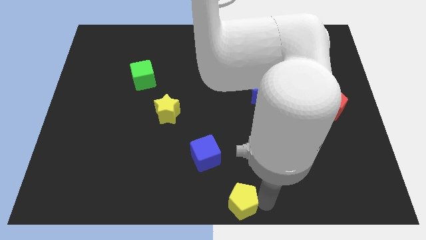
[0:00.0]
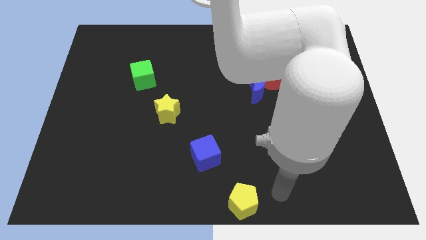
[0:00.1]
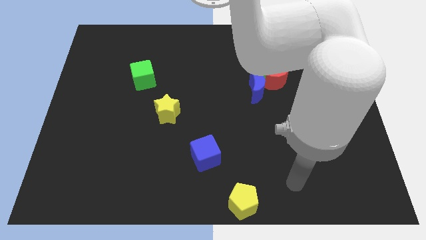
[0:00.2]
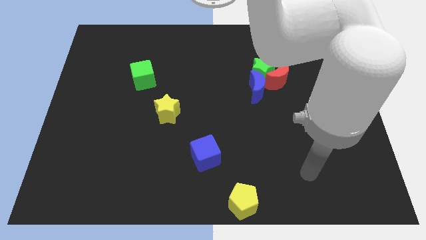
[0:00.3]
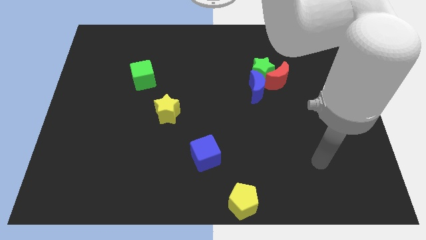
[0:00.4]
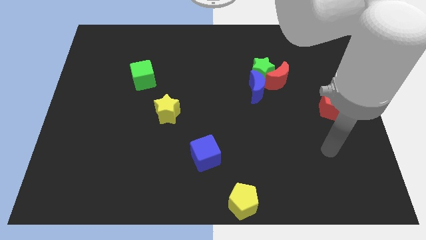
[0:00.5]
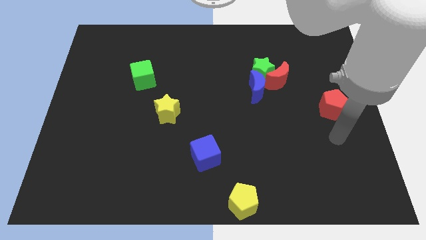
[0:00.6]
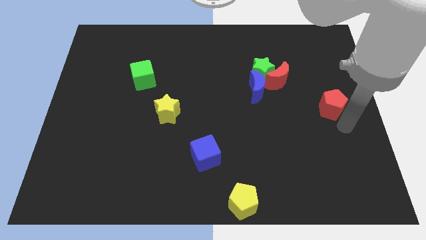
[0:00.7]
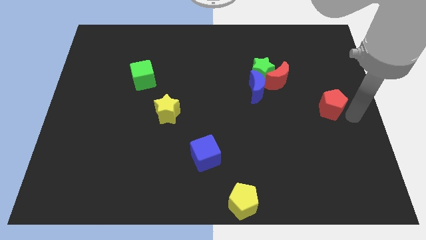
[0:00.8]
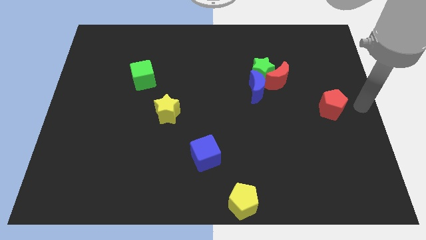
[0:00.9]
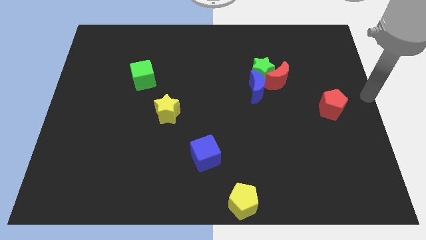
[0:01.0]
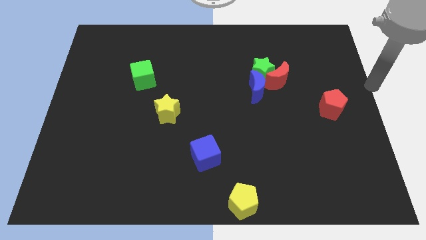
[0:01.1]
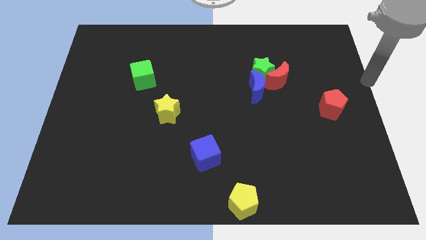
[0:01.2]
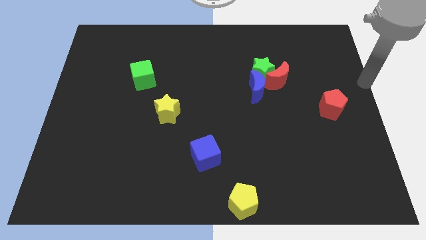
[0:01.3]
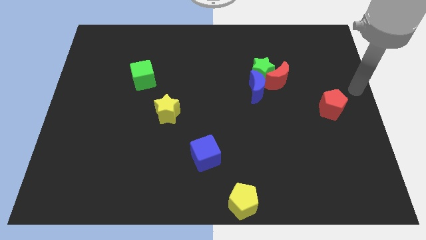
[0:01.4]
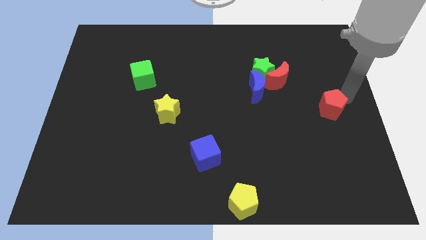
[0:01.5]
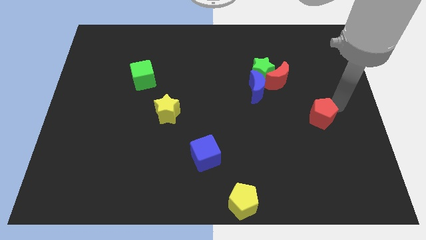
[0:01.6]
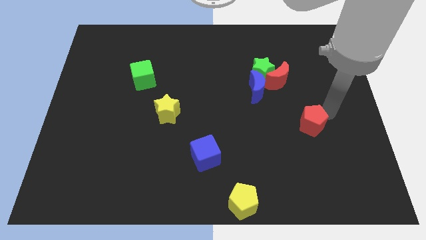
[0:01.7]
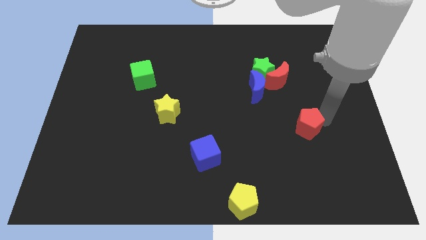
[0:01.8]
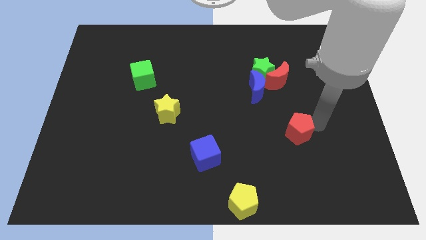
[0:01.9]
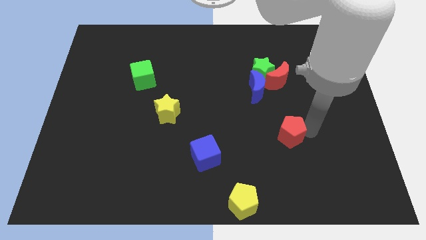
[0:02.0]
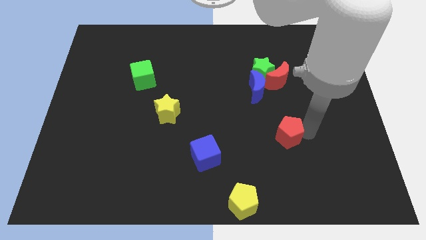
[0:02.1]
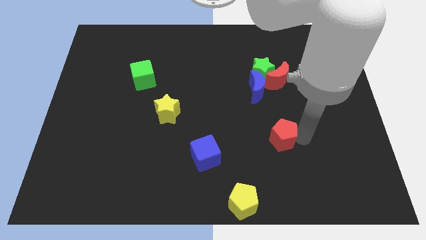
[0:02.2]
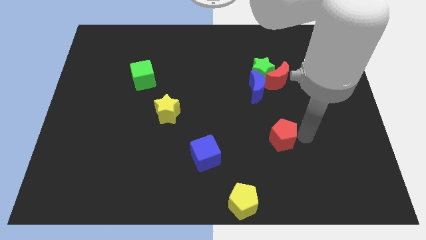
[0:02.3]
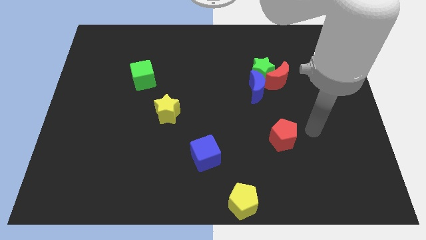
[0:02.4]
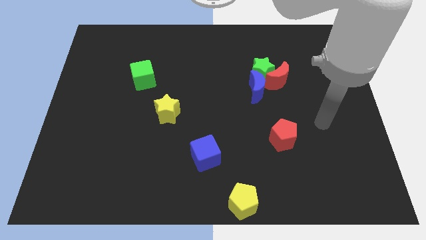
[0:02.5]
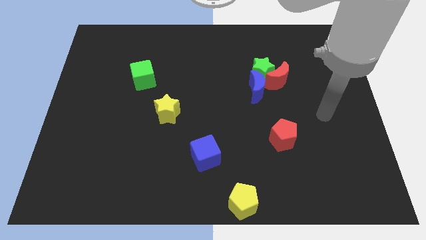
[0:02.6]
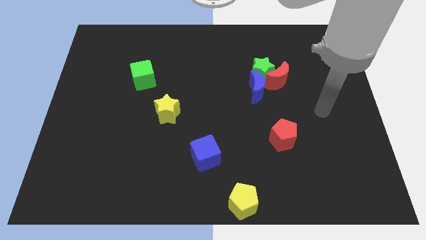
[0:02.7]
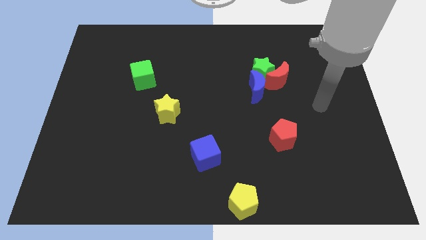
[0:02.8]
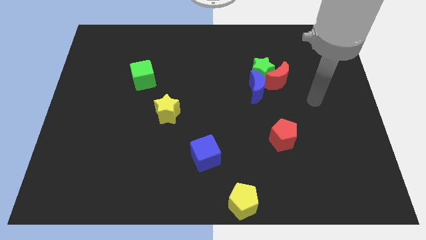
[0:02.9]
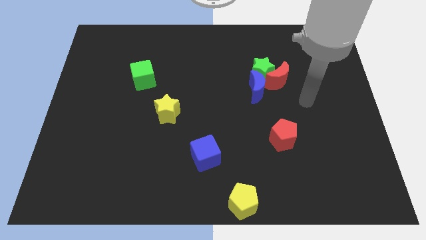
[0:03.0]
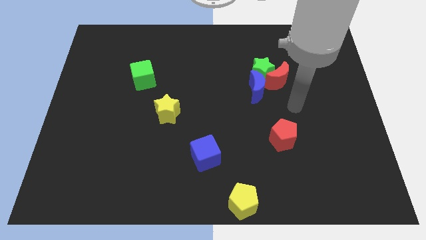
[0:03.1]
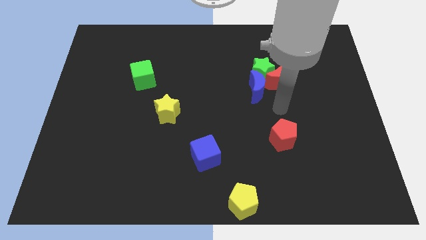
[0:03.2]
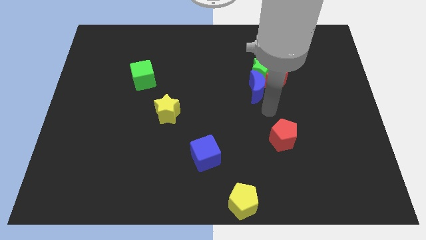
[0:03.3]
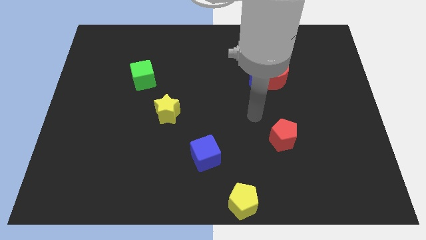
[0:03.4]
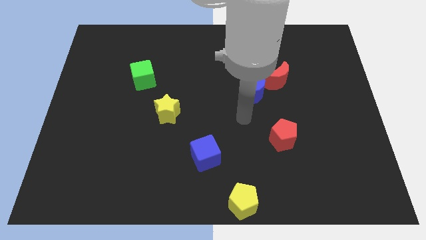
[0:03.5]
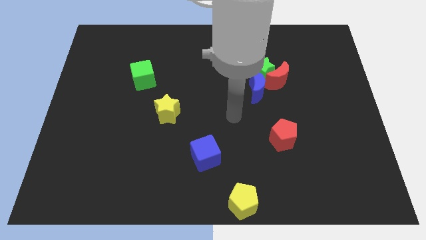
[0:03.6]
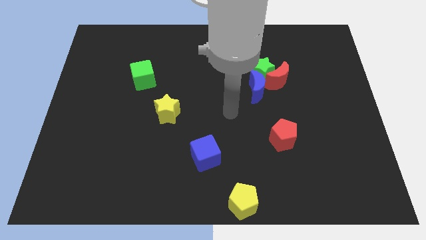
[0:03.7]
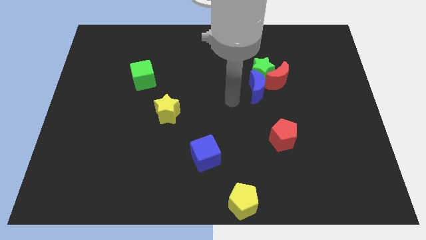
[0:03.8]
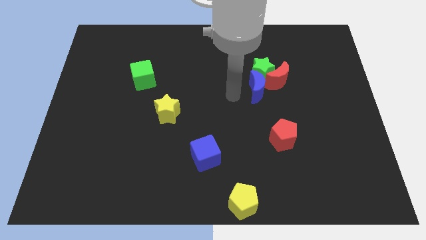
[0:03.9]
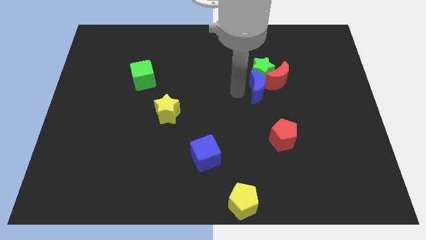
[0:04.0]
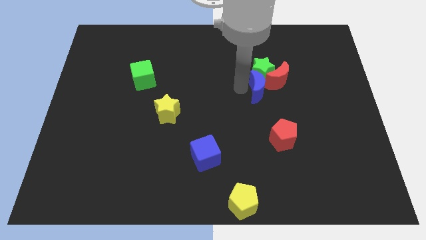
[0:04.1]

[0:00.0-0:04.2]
place the red pentagon diagonally above the yellow pentagon

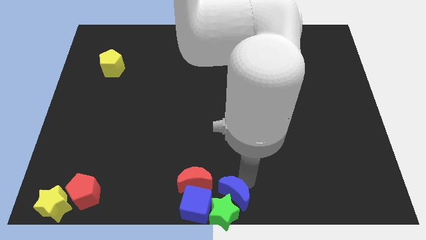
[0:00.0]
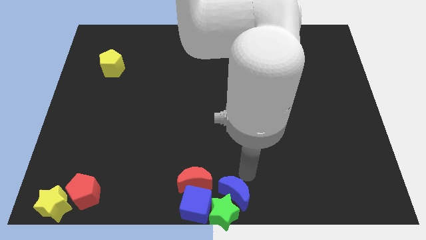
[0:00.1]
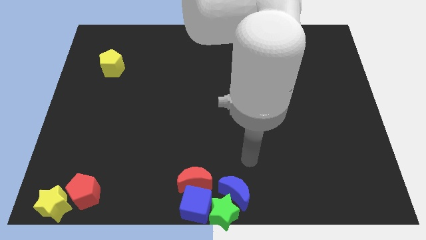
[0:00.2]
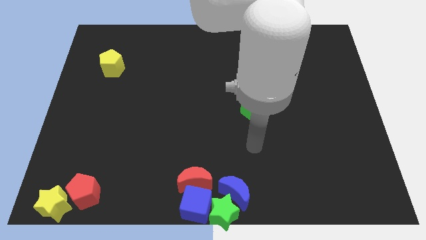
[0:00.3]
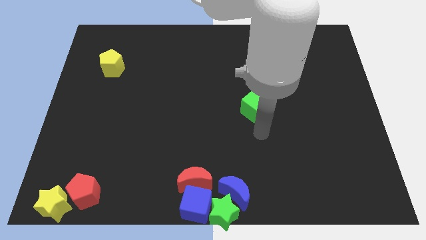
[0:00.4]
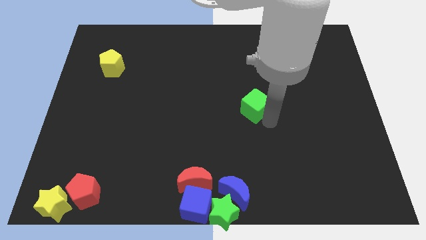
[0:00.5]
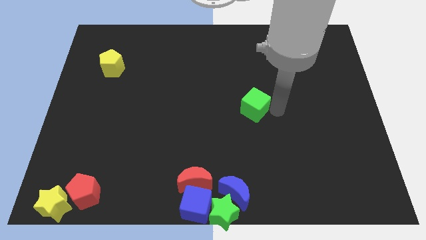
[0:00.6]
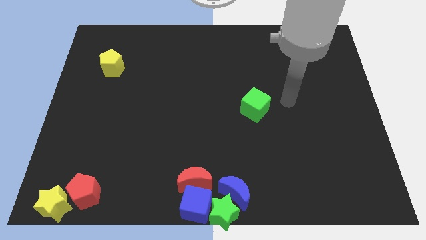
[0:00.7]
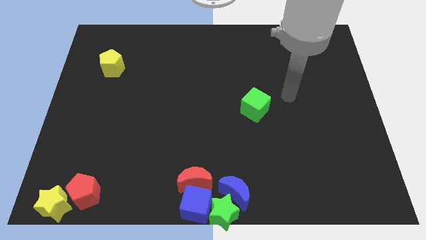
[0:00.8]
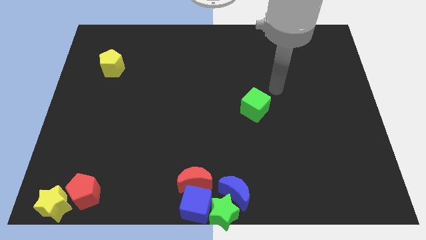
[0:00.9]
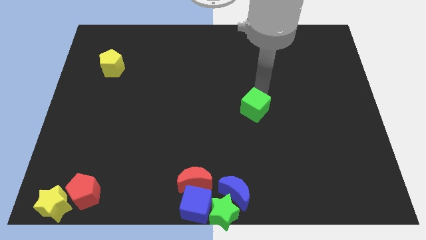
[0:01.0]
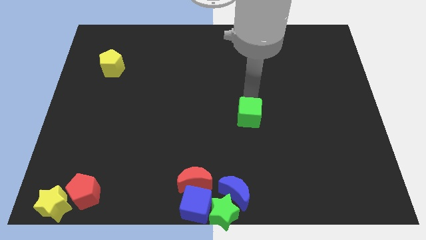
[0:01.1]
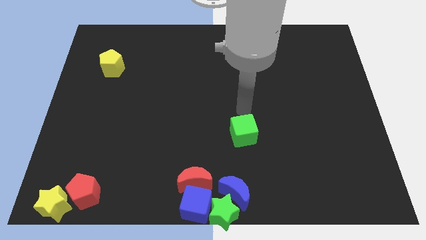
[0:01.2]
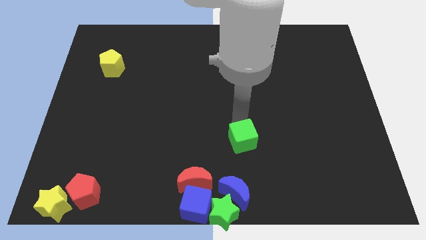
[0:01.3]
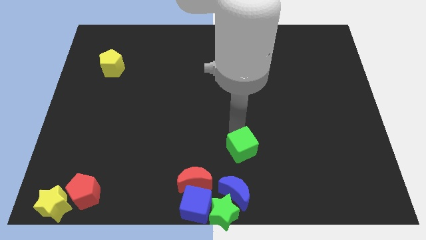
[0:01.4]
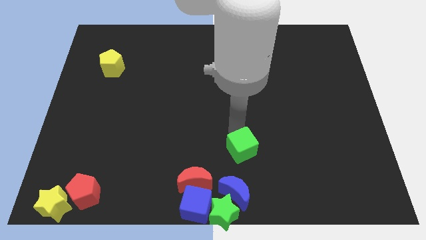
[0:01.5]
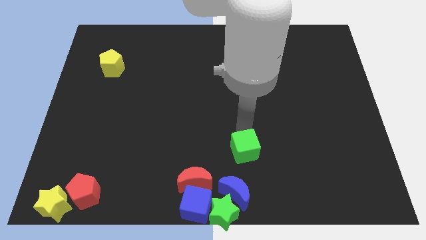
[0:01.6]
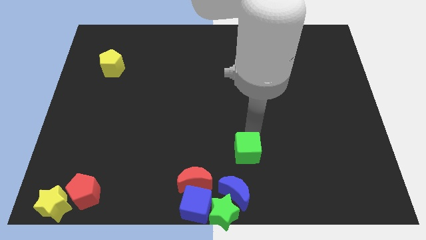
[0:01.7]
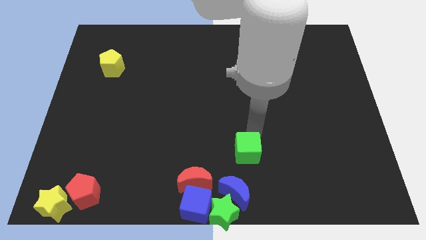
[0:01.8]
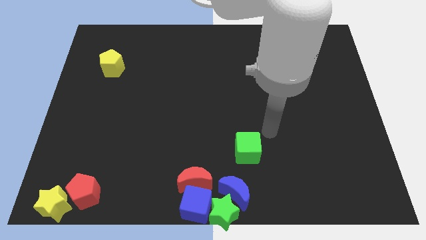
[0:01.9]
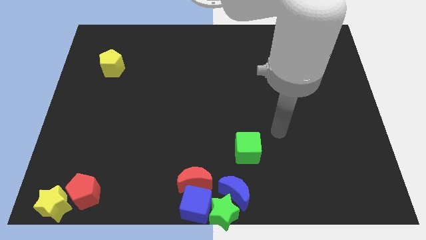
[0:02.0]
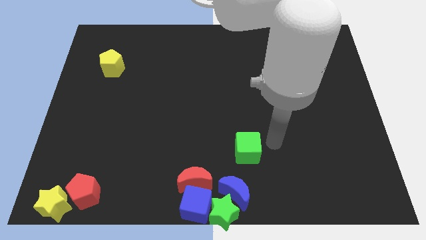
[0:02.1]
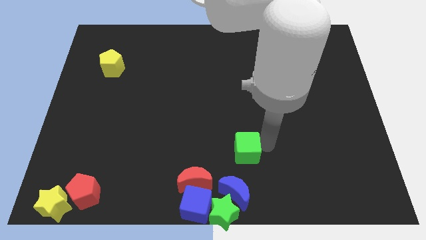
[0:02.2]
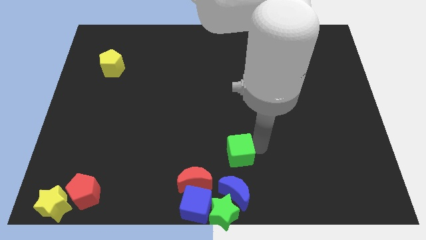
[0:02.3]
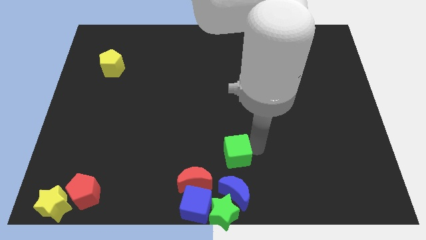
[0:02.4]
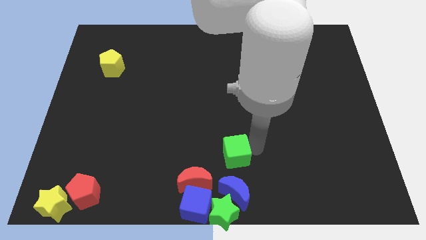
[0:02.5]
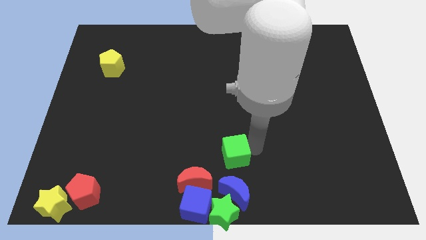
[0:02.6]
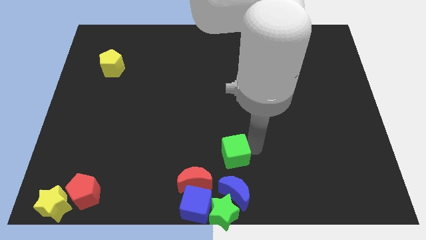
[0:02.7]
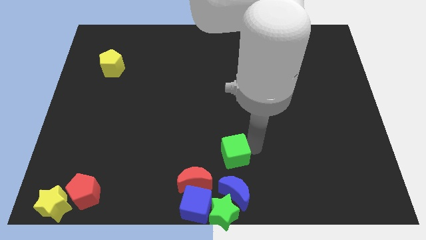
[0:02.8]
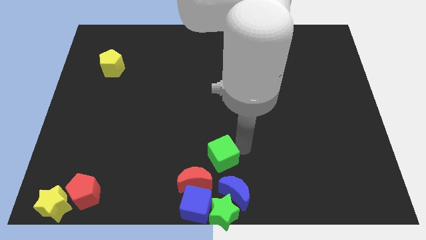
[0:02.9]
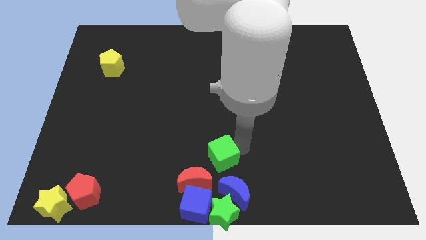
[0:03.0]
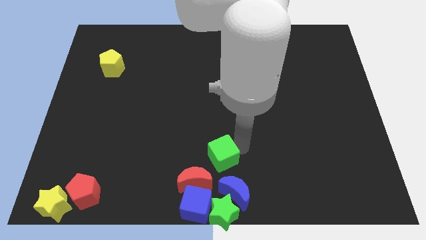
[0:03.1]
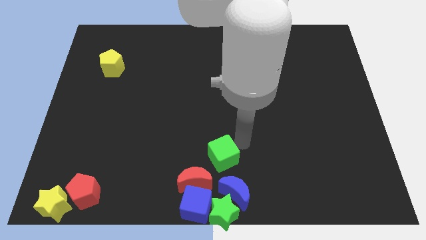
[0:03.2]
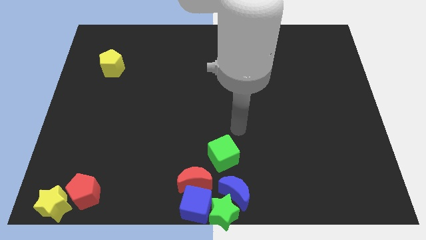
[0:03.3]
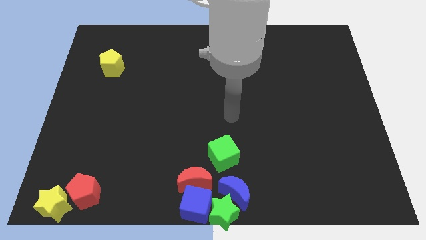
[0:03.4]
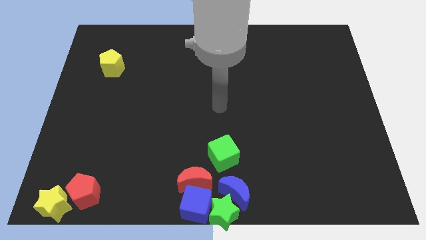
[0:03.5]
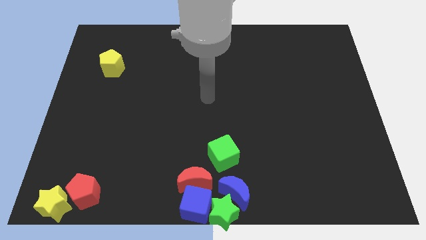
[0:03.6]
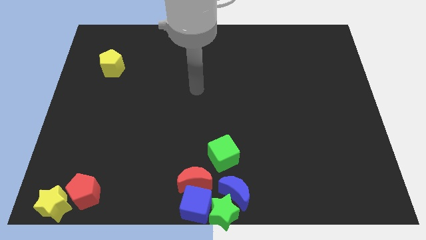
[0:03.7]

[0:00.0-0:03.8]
push the green cube to the top of the blue crescent

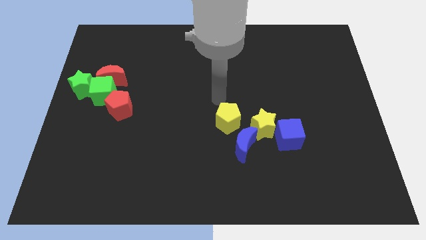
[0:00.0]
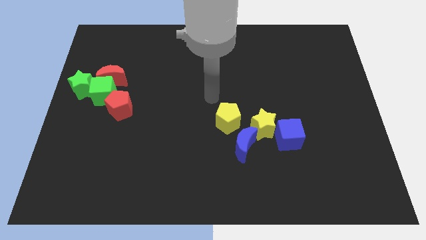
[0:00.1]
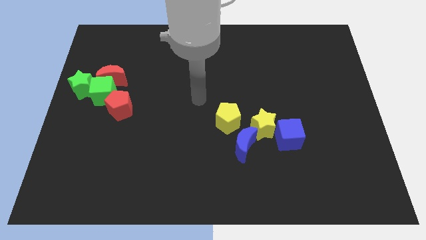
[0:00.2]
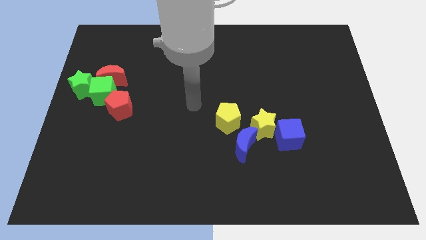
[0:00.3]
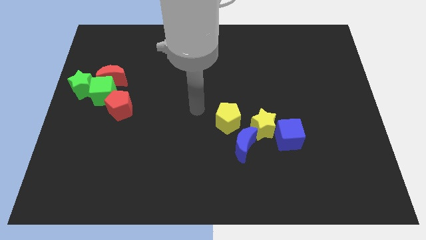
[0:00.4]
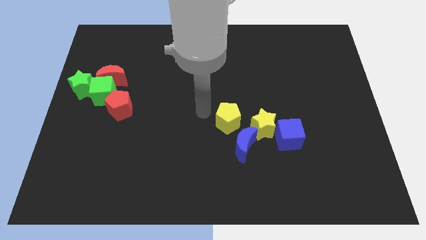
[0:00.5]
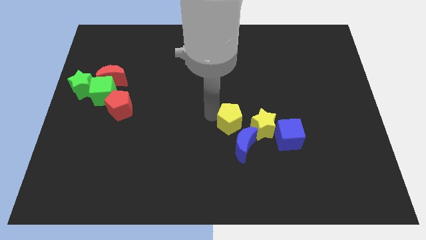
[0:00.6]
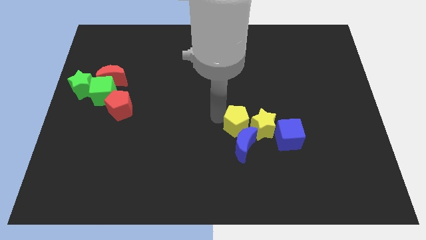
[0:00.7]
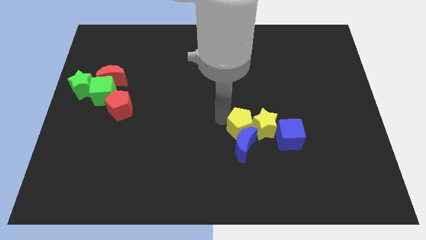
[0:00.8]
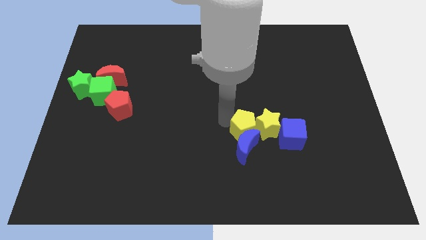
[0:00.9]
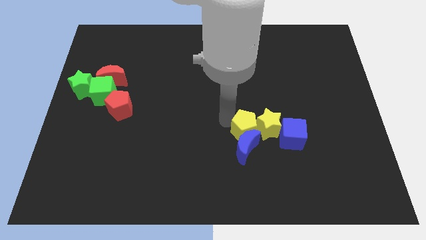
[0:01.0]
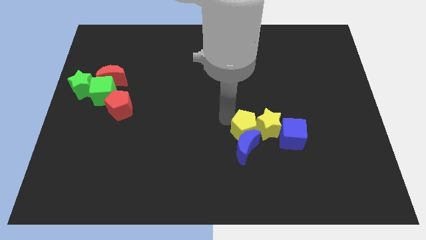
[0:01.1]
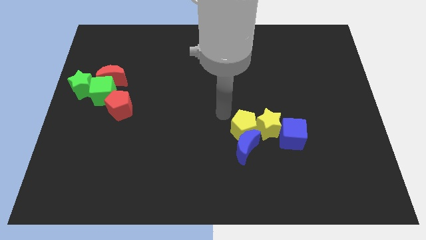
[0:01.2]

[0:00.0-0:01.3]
move the yellow pentagon into the yellow star and blue crescent
